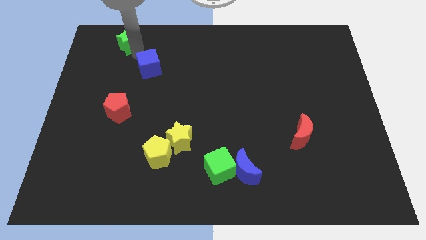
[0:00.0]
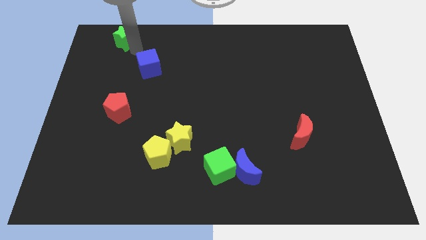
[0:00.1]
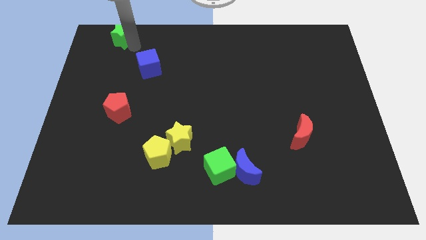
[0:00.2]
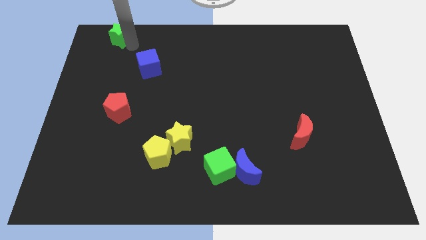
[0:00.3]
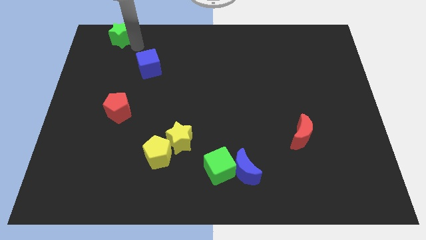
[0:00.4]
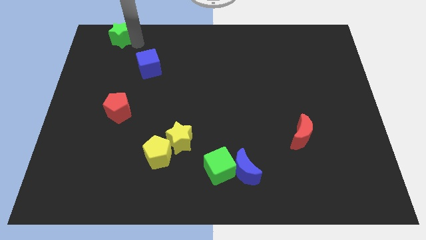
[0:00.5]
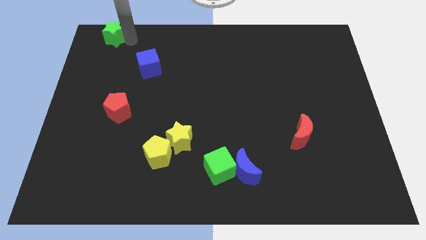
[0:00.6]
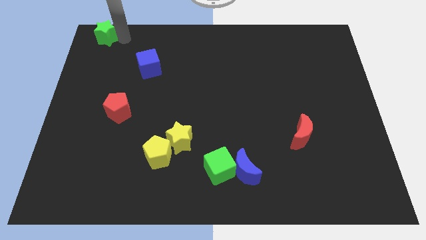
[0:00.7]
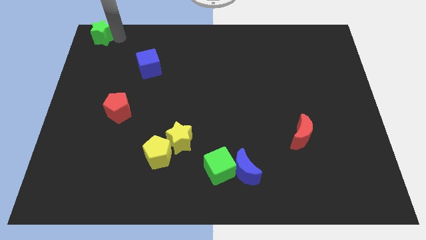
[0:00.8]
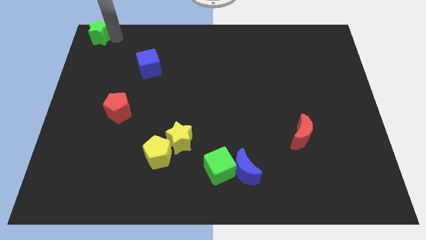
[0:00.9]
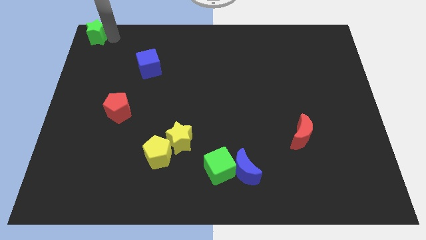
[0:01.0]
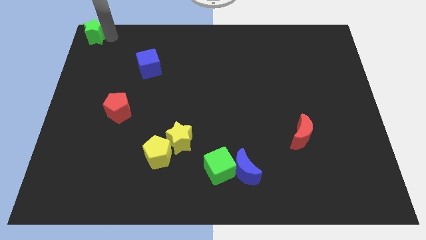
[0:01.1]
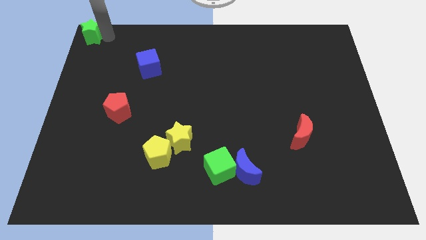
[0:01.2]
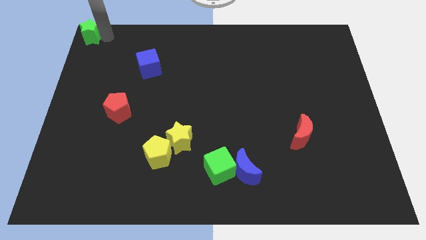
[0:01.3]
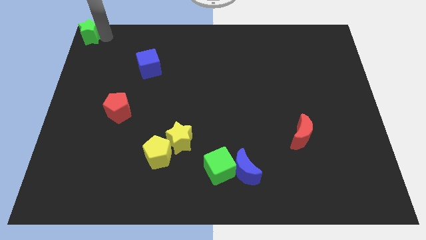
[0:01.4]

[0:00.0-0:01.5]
push the green star to the top left of the board

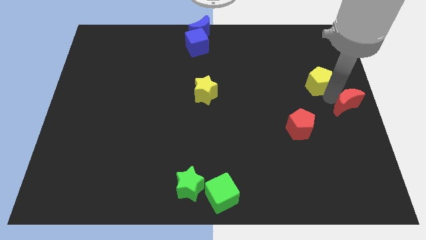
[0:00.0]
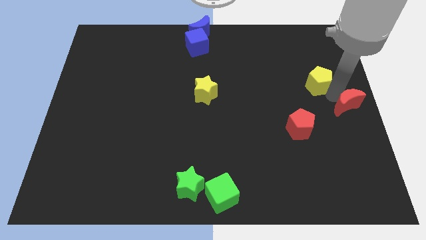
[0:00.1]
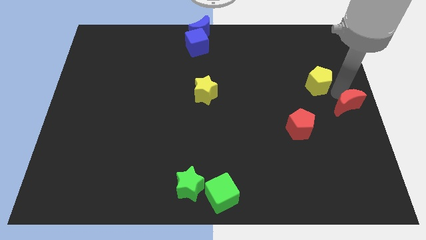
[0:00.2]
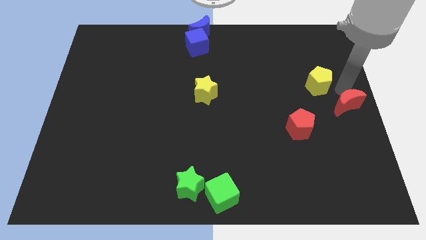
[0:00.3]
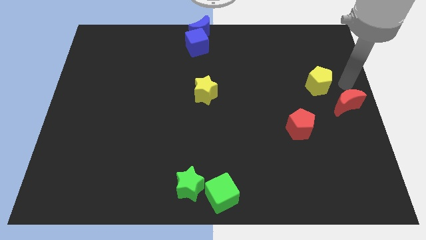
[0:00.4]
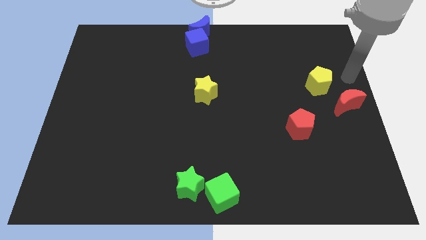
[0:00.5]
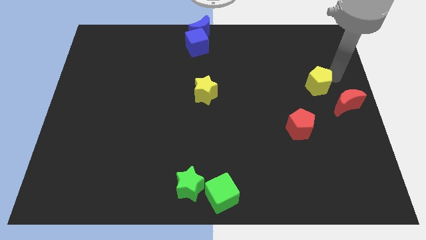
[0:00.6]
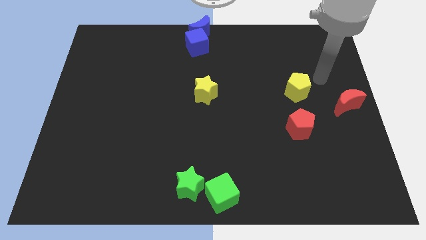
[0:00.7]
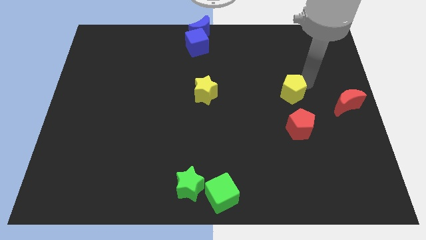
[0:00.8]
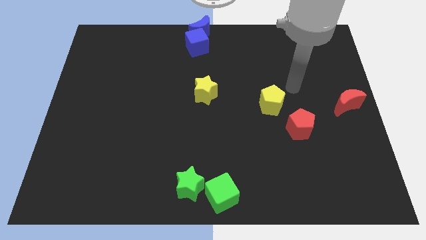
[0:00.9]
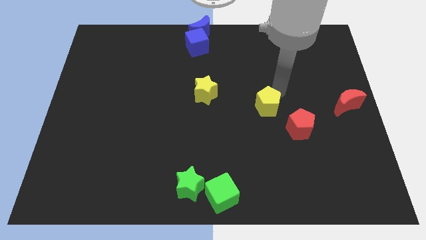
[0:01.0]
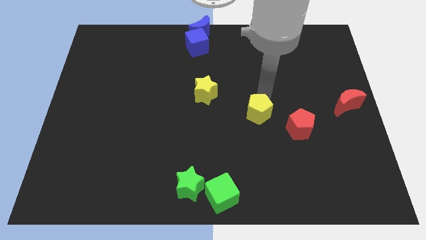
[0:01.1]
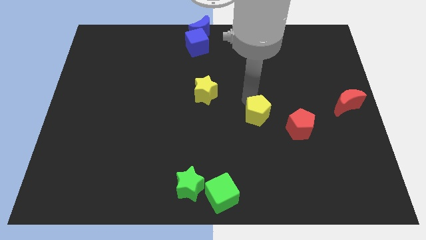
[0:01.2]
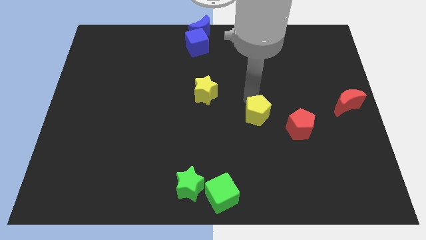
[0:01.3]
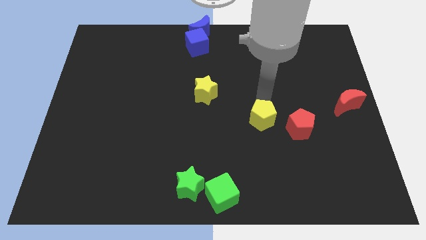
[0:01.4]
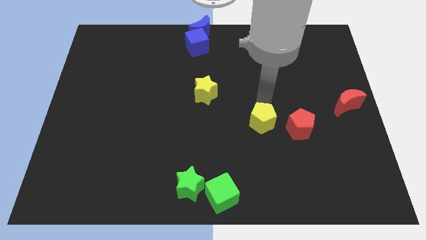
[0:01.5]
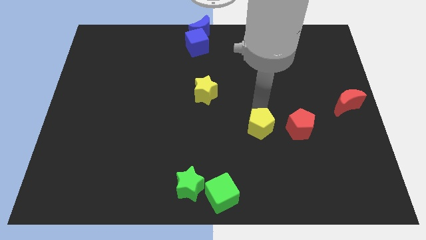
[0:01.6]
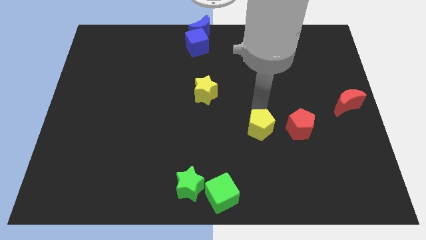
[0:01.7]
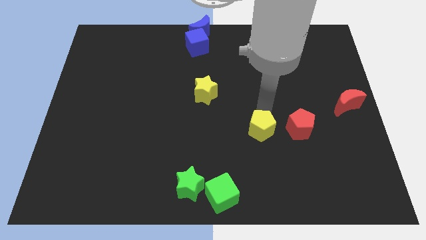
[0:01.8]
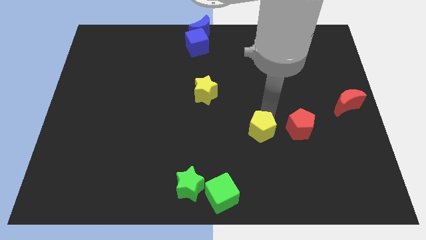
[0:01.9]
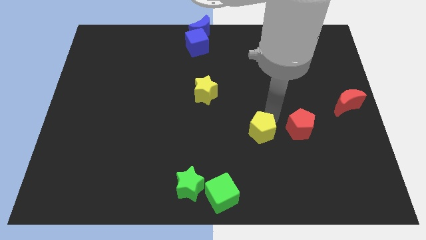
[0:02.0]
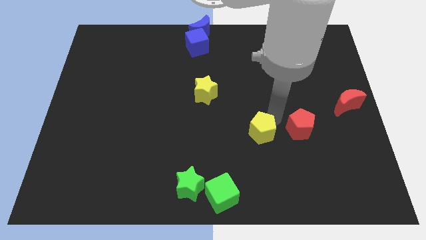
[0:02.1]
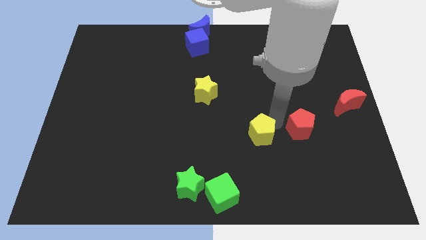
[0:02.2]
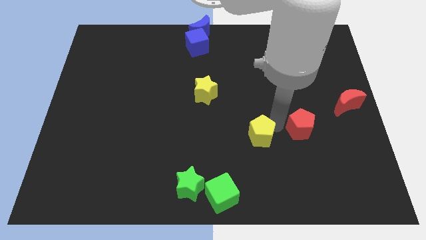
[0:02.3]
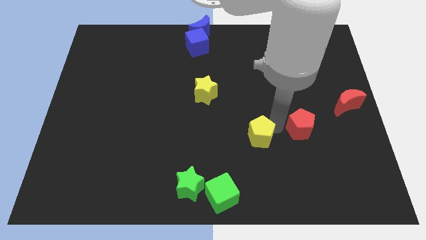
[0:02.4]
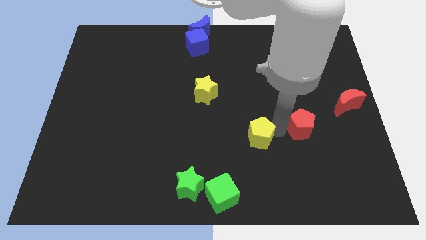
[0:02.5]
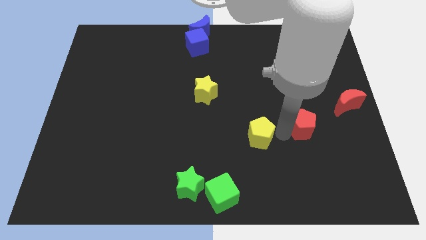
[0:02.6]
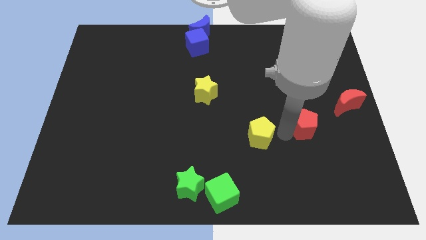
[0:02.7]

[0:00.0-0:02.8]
put the yellow pentagon diagonal to the yellow star

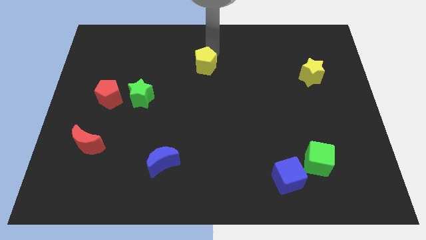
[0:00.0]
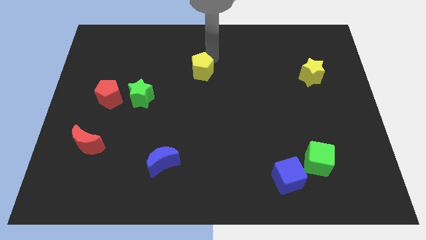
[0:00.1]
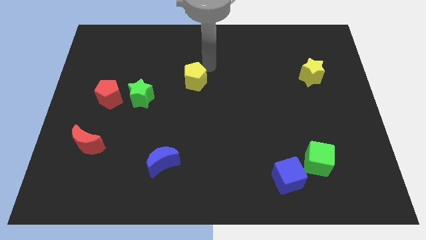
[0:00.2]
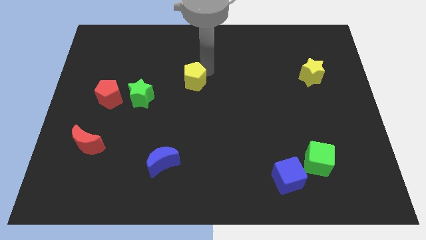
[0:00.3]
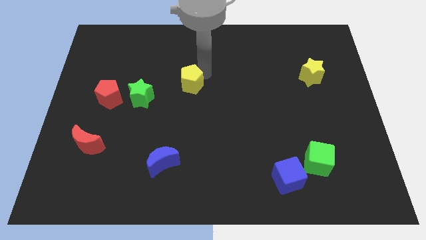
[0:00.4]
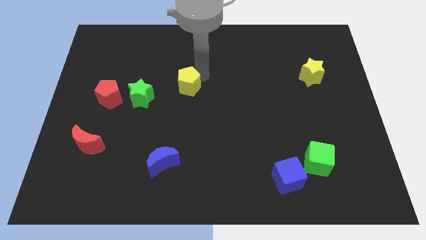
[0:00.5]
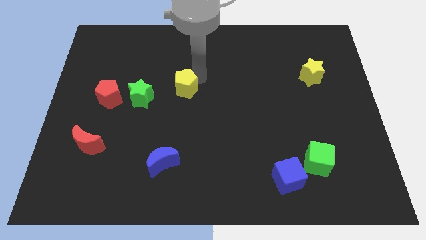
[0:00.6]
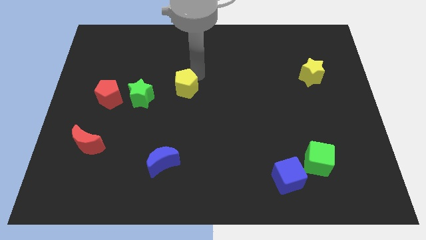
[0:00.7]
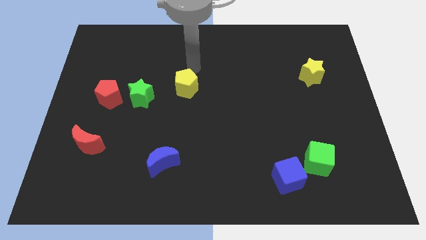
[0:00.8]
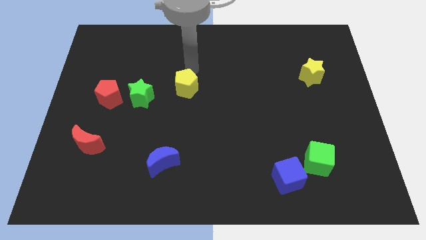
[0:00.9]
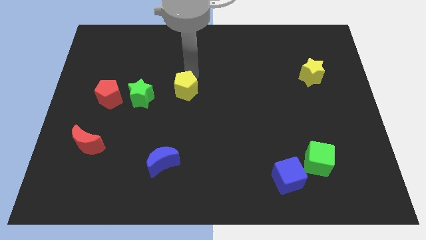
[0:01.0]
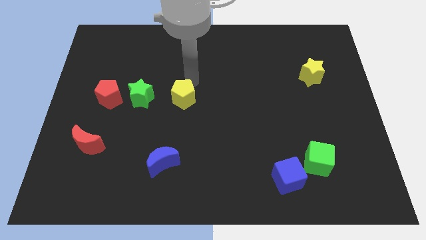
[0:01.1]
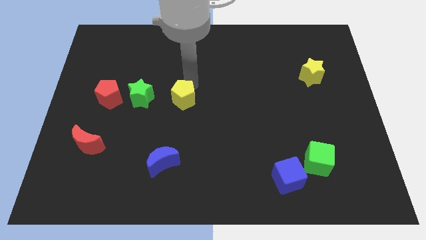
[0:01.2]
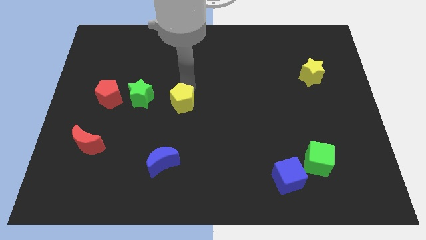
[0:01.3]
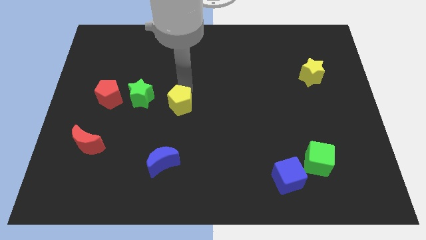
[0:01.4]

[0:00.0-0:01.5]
move the yellow pentagon right to the green star

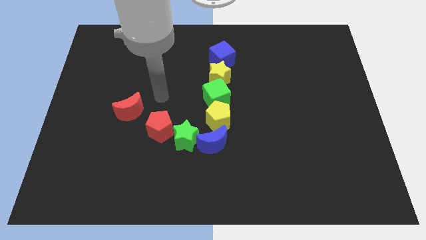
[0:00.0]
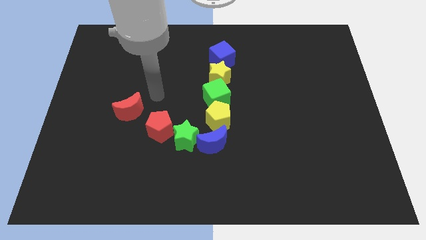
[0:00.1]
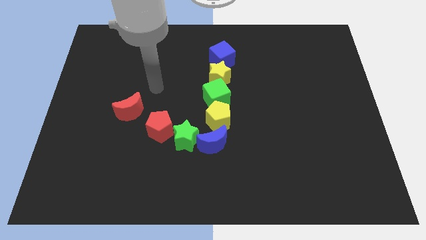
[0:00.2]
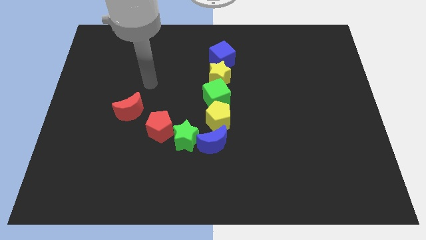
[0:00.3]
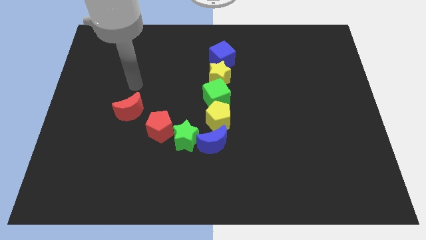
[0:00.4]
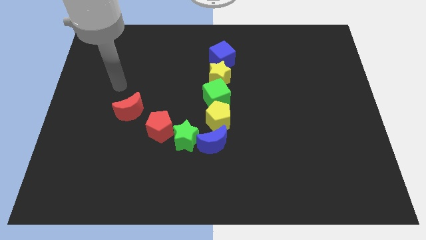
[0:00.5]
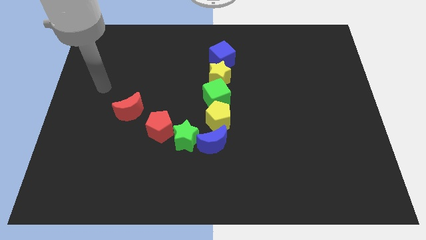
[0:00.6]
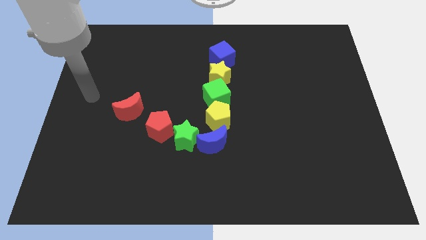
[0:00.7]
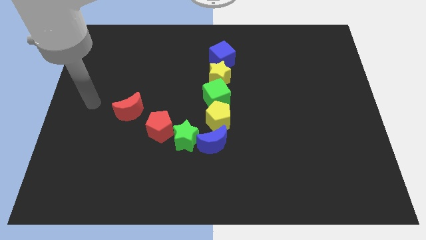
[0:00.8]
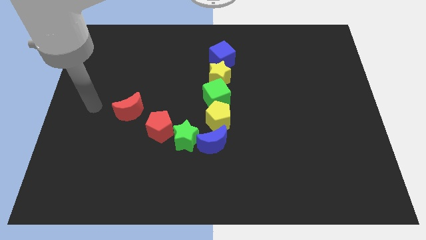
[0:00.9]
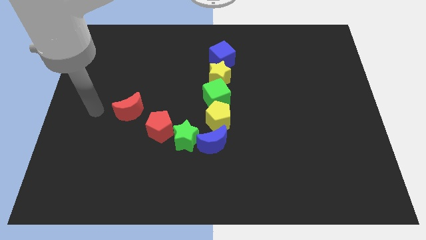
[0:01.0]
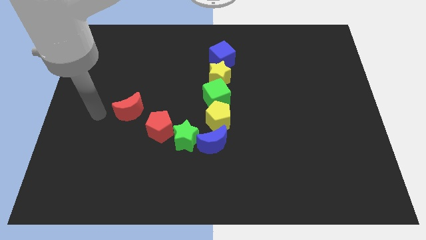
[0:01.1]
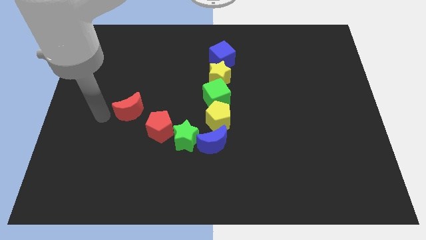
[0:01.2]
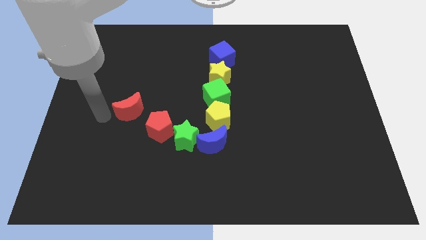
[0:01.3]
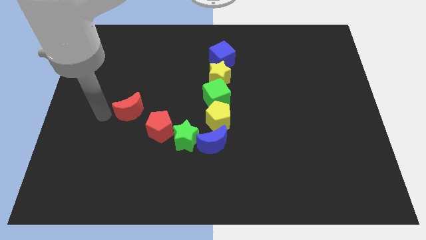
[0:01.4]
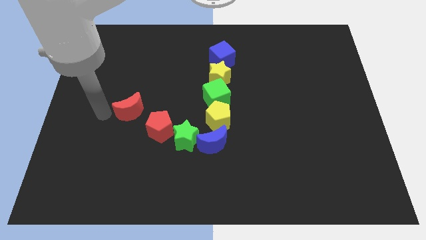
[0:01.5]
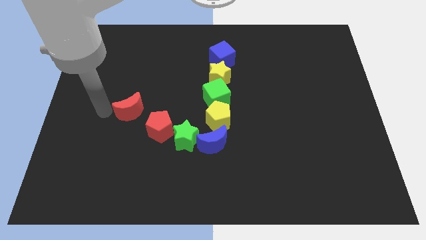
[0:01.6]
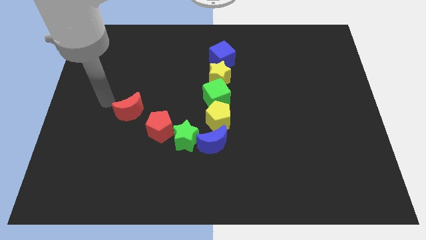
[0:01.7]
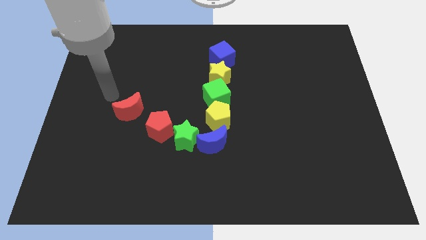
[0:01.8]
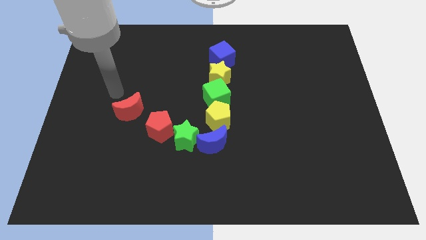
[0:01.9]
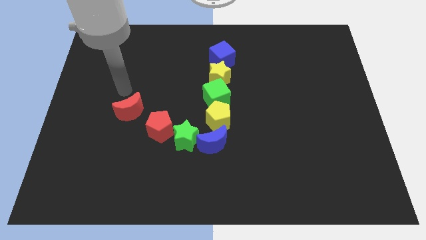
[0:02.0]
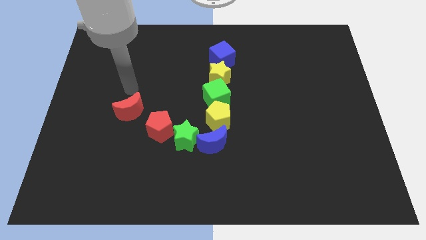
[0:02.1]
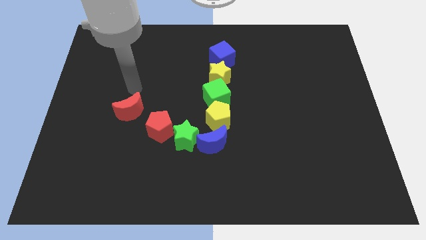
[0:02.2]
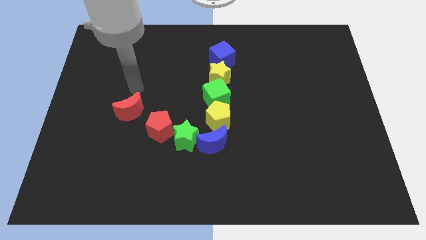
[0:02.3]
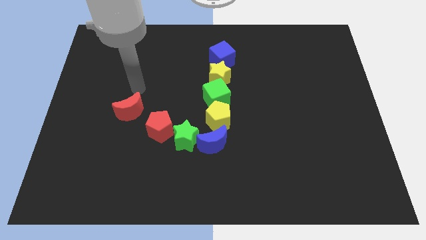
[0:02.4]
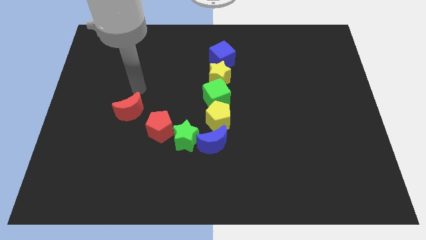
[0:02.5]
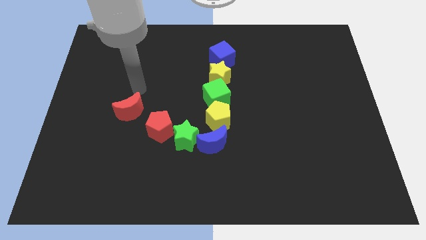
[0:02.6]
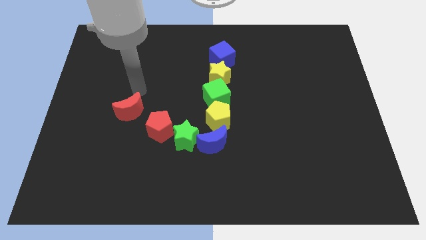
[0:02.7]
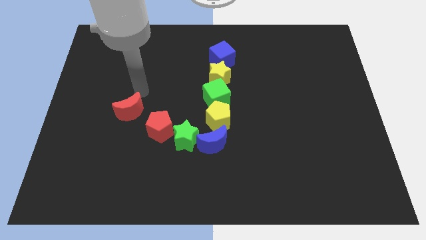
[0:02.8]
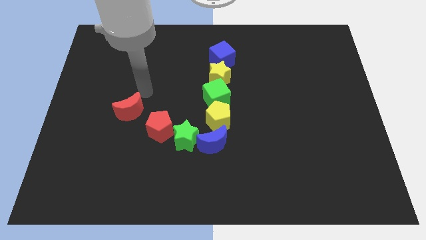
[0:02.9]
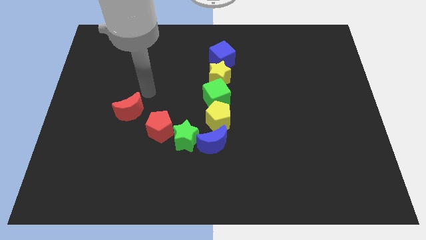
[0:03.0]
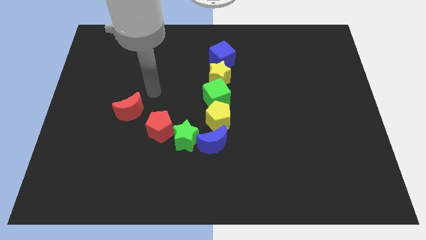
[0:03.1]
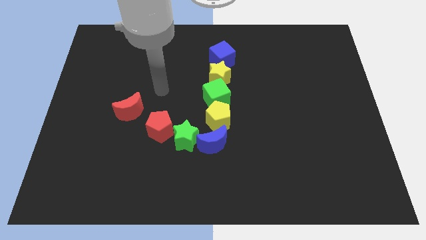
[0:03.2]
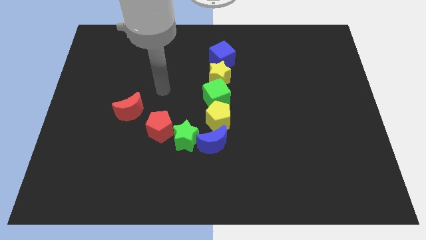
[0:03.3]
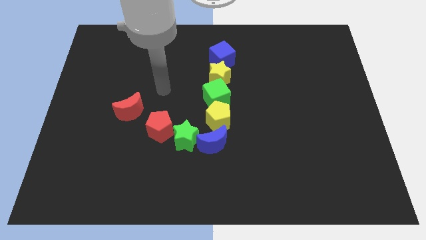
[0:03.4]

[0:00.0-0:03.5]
move youe arm and point on top of the red pentagon
